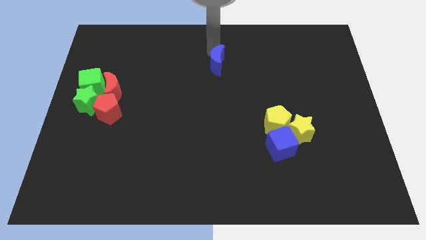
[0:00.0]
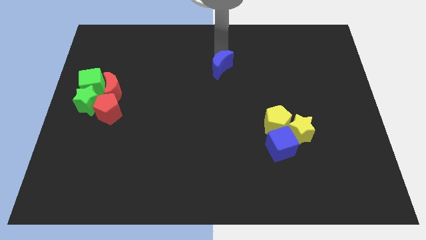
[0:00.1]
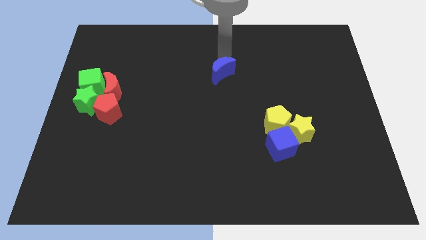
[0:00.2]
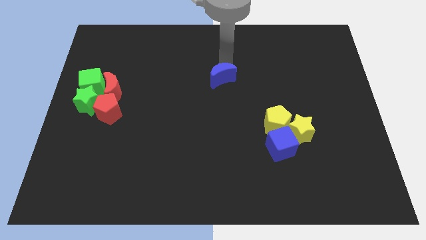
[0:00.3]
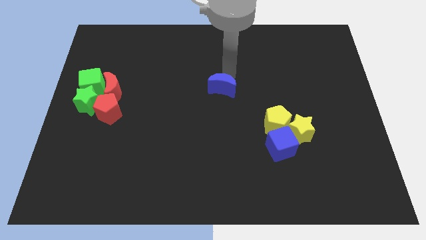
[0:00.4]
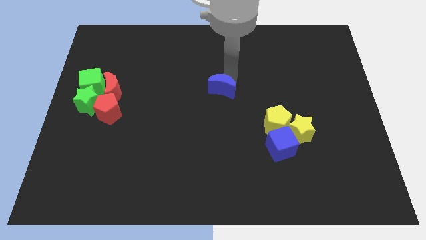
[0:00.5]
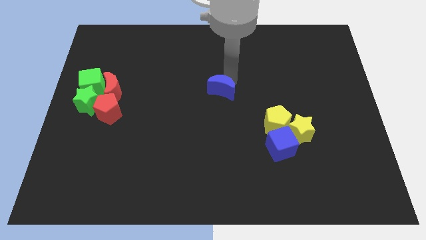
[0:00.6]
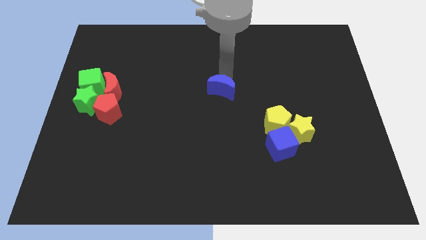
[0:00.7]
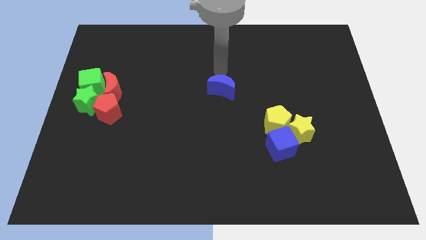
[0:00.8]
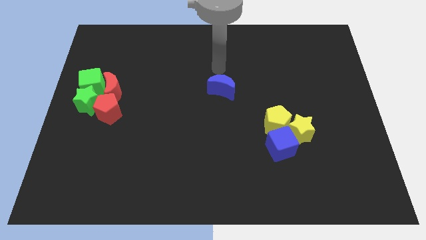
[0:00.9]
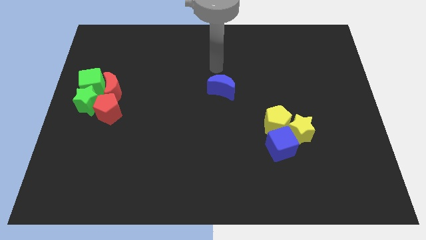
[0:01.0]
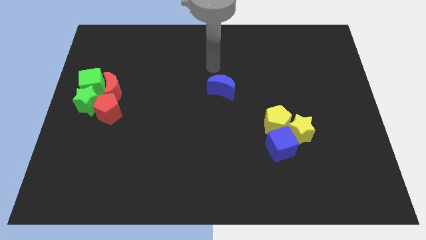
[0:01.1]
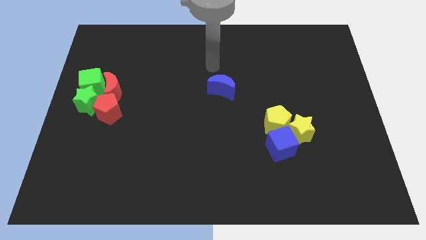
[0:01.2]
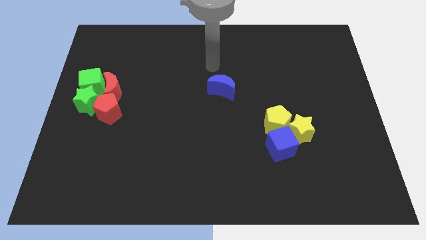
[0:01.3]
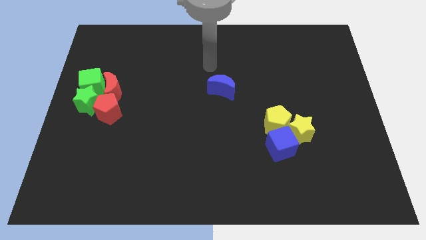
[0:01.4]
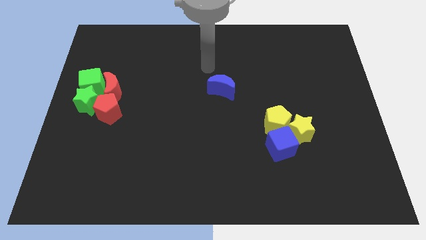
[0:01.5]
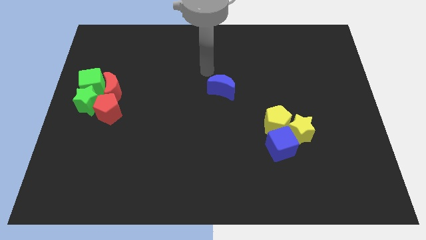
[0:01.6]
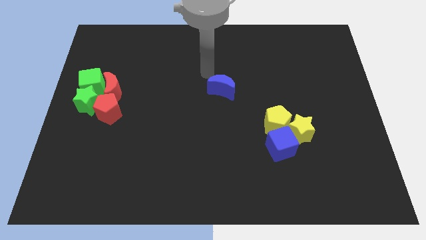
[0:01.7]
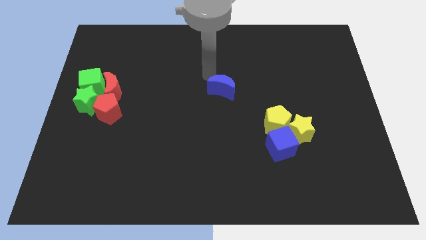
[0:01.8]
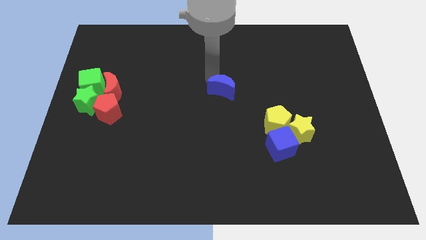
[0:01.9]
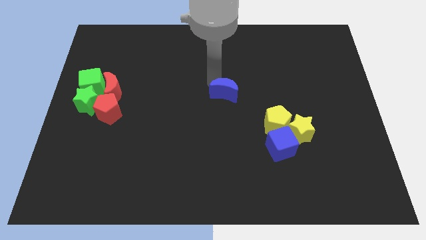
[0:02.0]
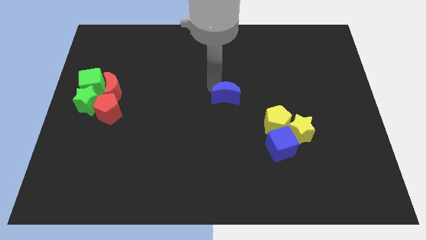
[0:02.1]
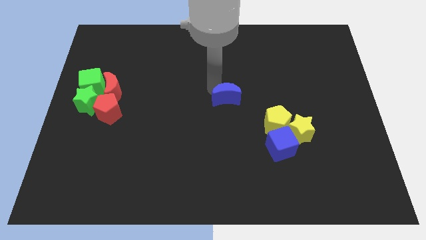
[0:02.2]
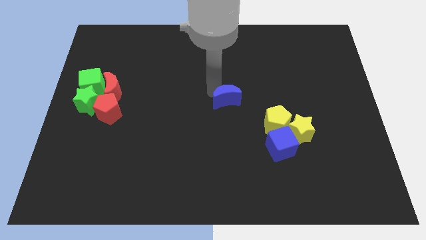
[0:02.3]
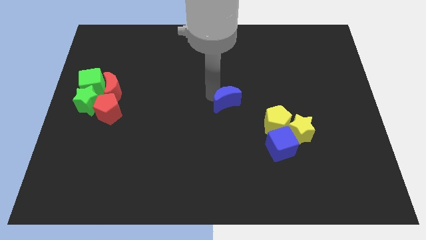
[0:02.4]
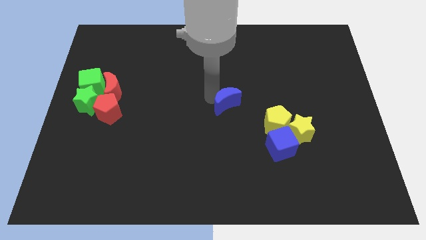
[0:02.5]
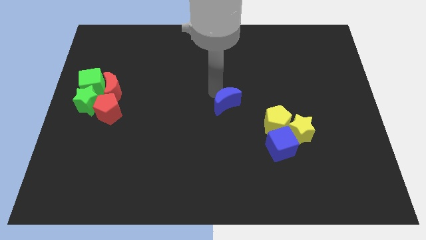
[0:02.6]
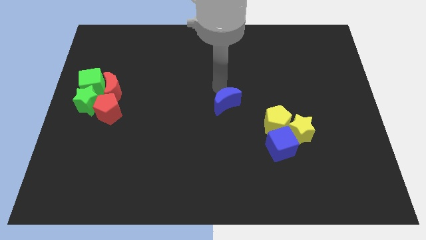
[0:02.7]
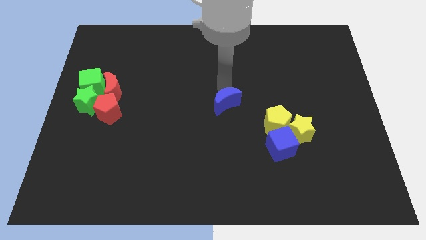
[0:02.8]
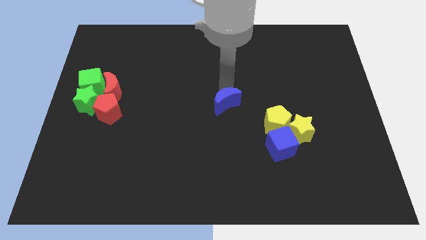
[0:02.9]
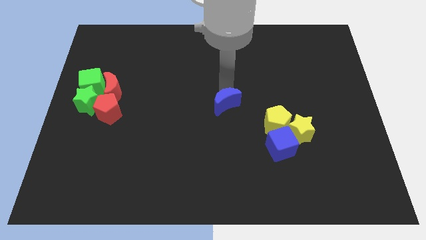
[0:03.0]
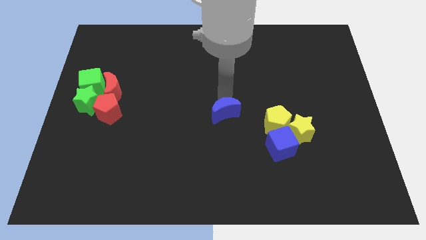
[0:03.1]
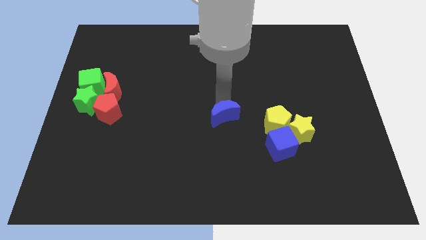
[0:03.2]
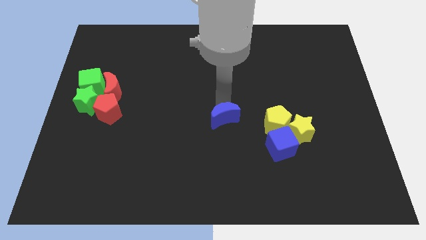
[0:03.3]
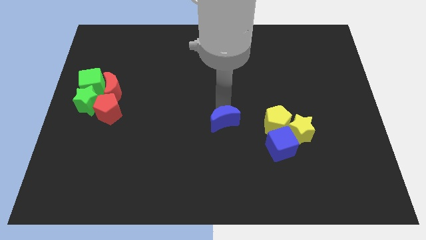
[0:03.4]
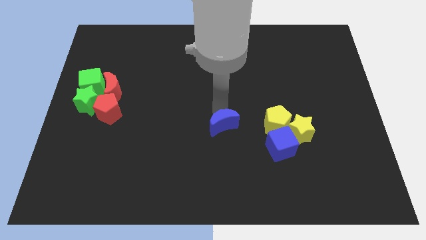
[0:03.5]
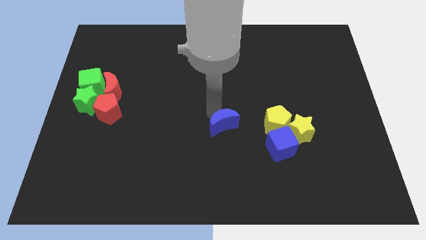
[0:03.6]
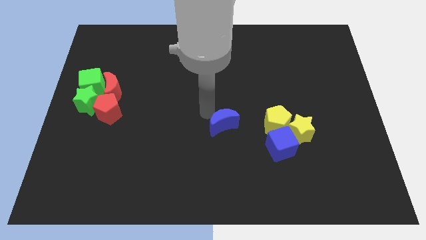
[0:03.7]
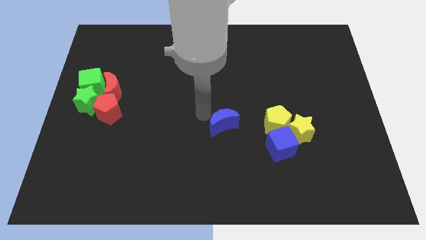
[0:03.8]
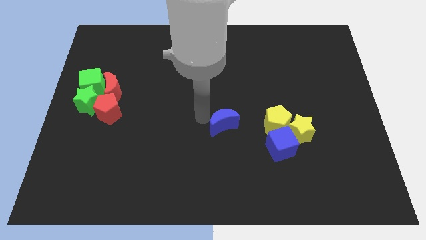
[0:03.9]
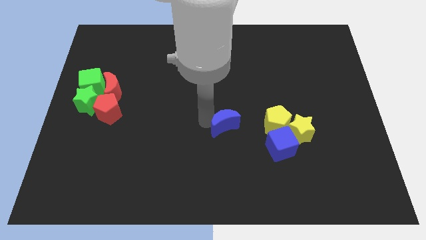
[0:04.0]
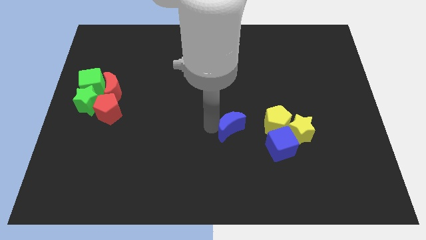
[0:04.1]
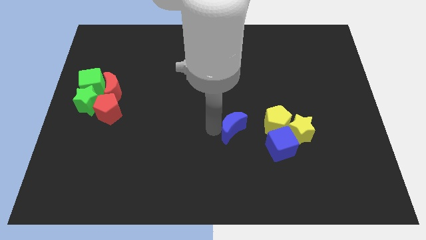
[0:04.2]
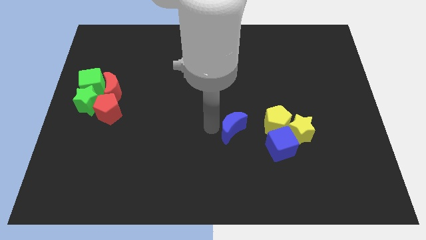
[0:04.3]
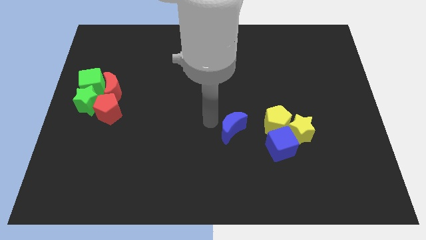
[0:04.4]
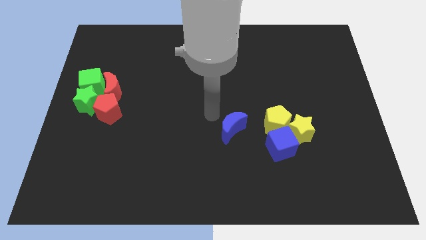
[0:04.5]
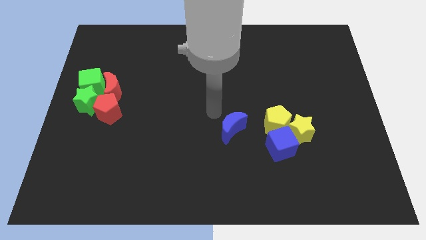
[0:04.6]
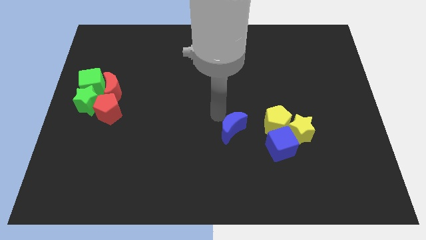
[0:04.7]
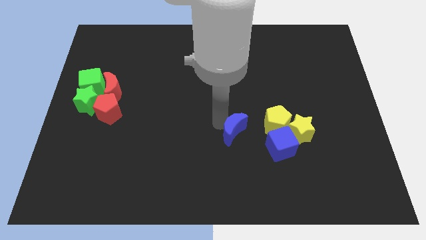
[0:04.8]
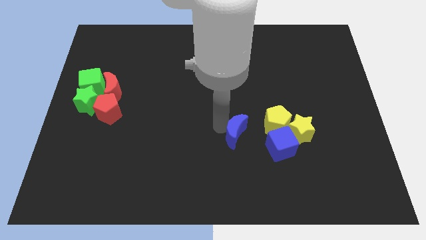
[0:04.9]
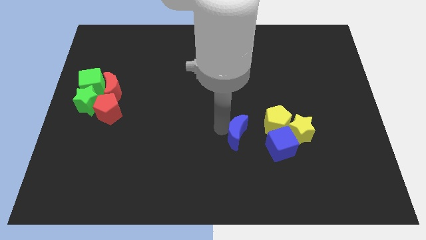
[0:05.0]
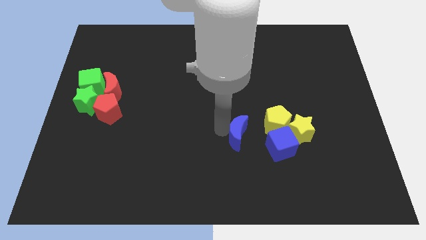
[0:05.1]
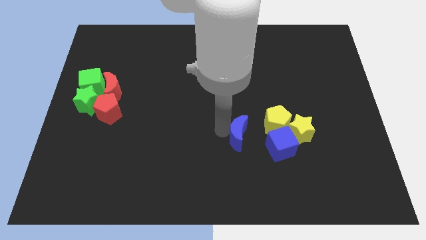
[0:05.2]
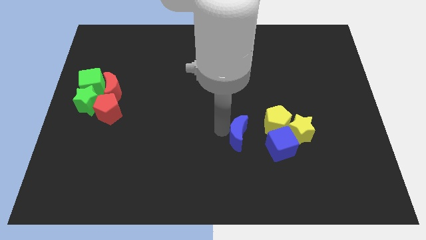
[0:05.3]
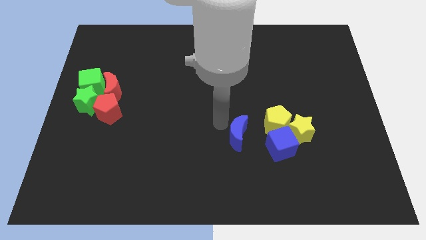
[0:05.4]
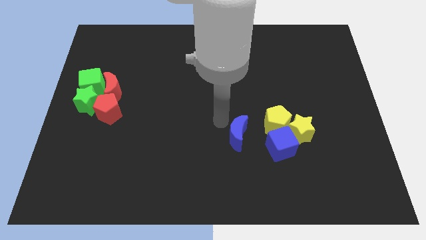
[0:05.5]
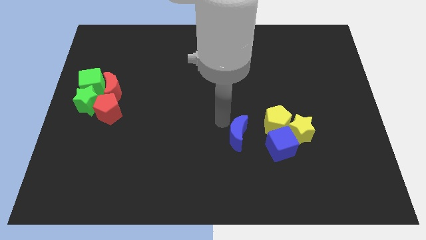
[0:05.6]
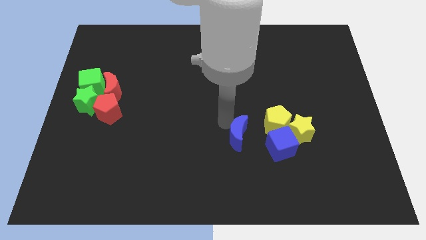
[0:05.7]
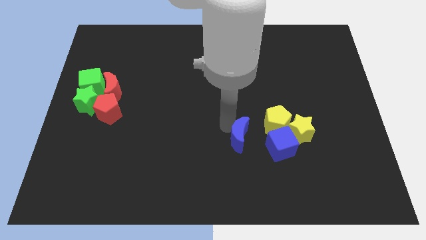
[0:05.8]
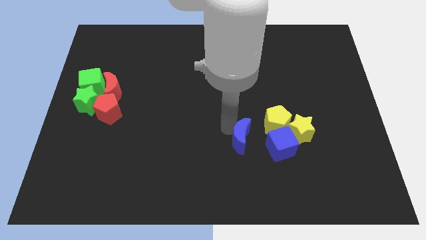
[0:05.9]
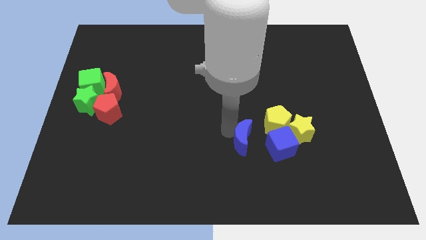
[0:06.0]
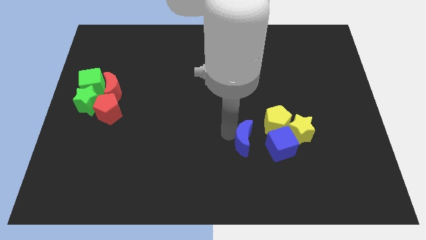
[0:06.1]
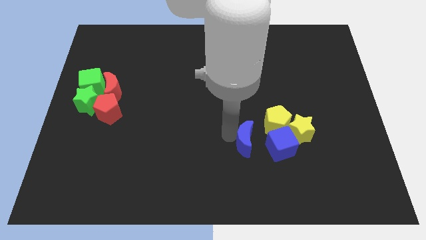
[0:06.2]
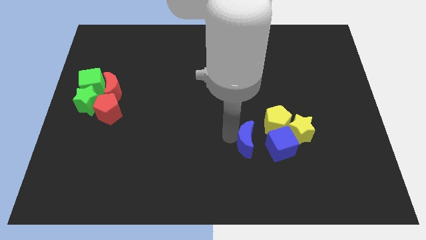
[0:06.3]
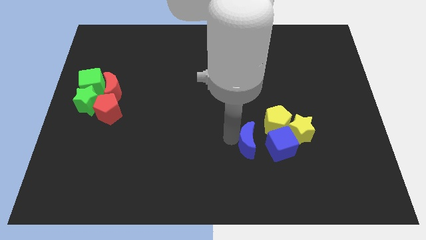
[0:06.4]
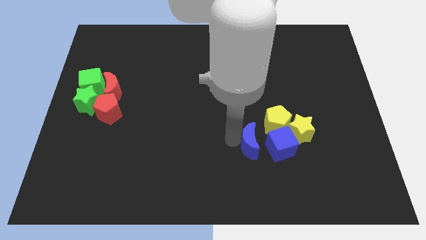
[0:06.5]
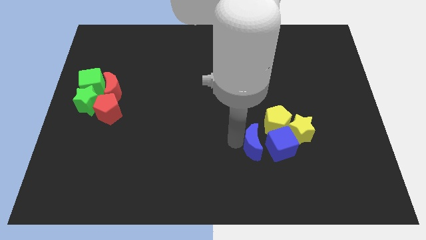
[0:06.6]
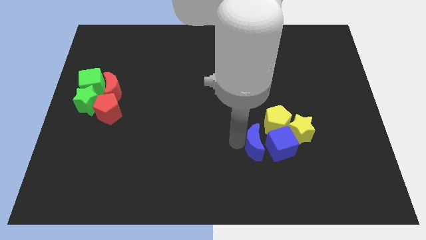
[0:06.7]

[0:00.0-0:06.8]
put the blue crescent to the left of the blue cube

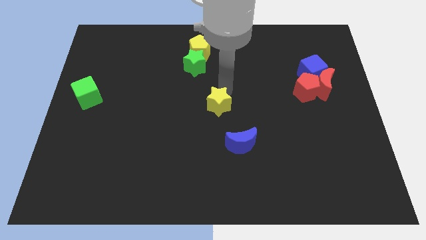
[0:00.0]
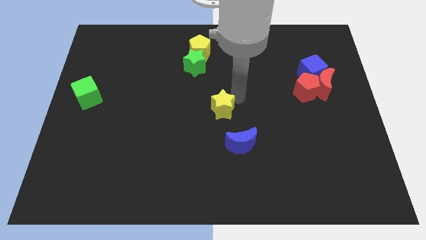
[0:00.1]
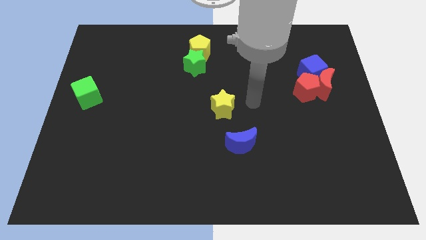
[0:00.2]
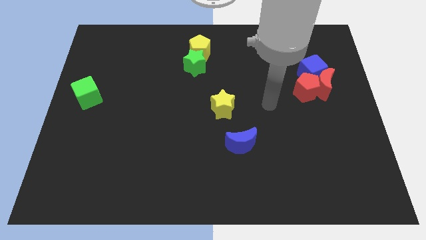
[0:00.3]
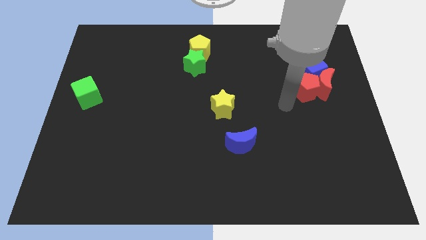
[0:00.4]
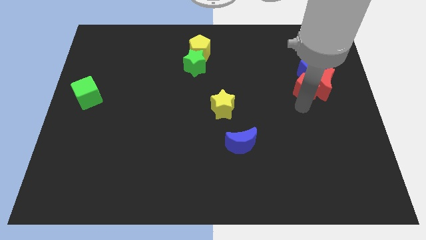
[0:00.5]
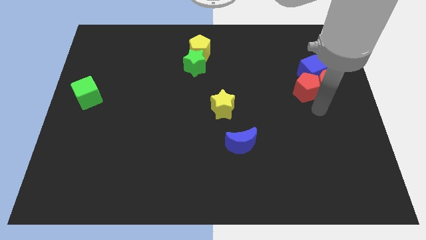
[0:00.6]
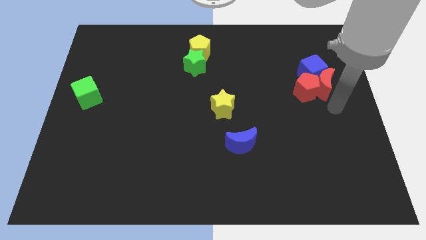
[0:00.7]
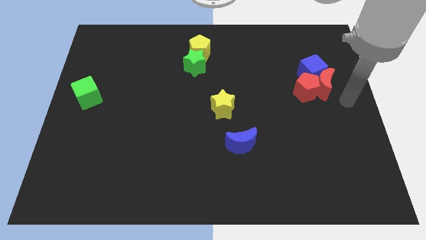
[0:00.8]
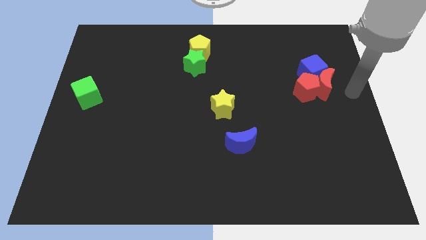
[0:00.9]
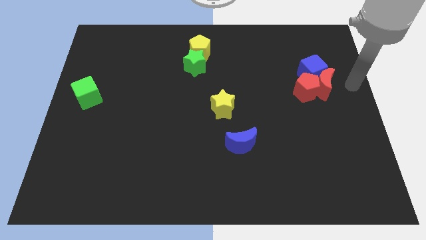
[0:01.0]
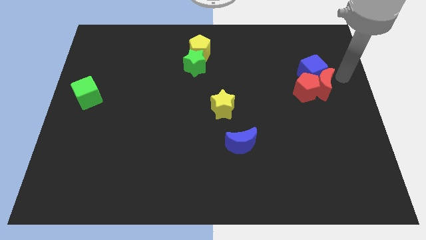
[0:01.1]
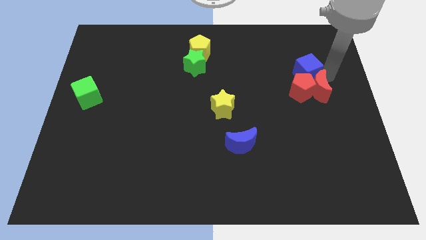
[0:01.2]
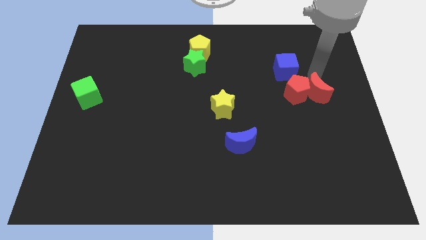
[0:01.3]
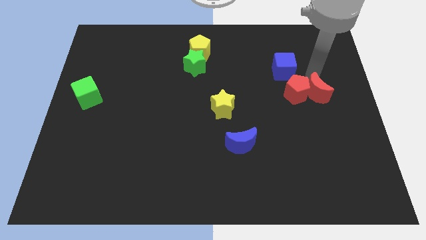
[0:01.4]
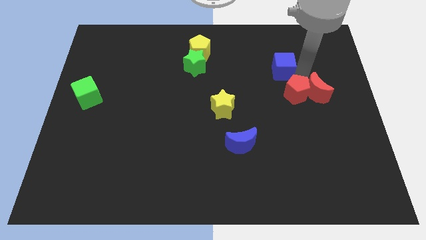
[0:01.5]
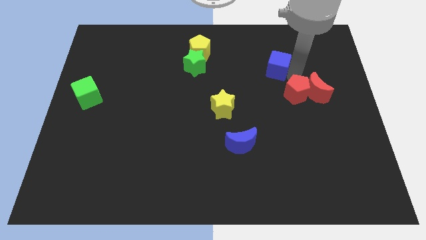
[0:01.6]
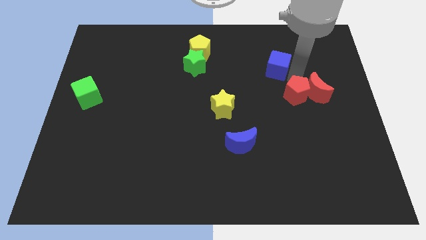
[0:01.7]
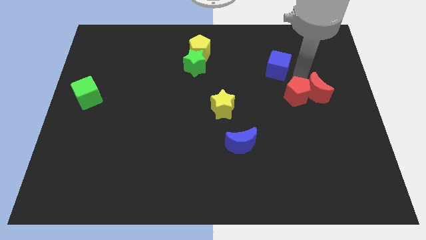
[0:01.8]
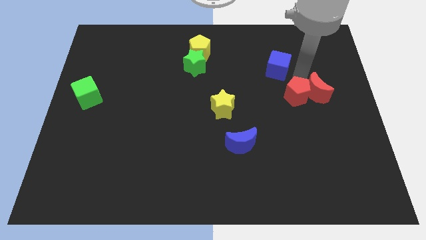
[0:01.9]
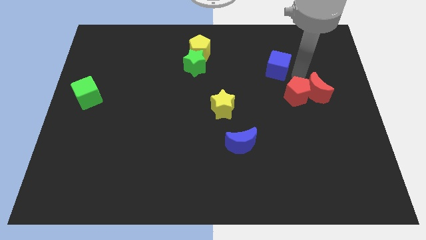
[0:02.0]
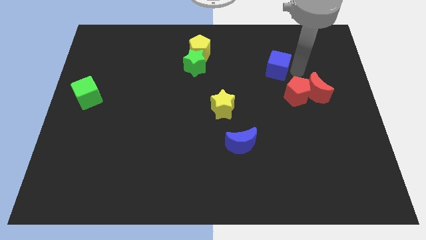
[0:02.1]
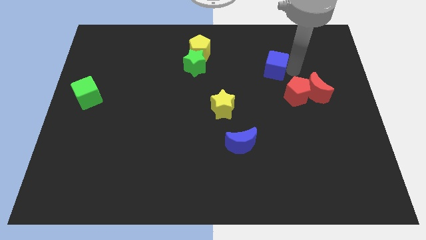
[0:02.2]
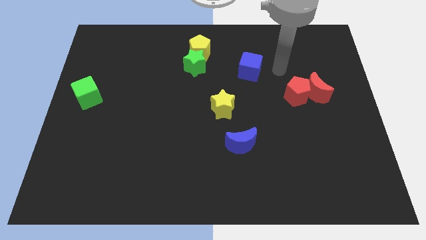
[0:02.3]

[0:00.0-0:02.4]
separate blue cube from red pentagon
